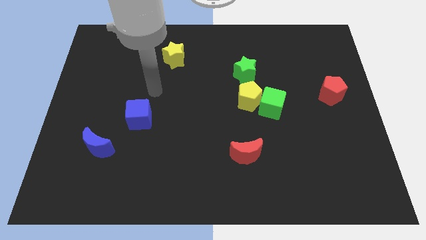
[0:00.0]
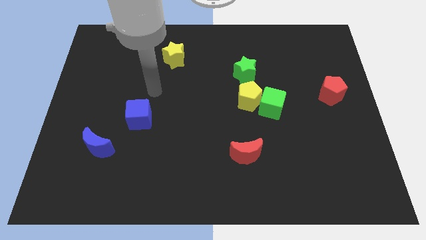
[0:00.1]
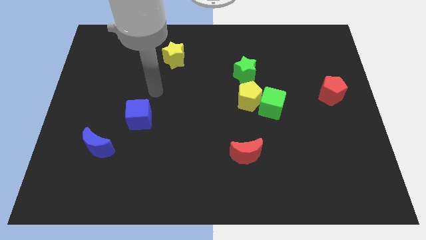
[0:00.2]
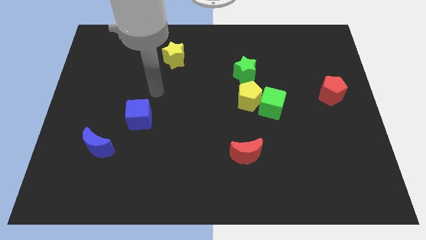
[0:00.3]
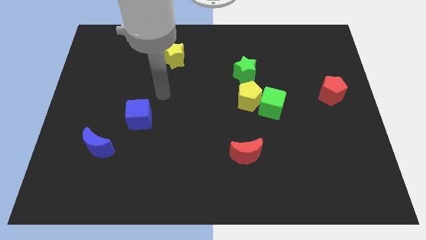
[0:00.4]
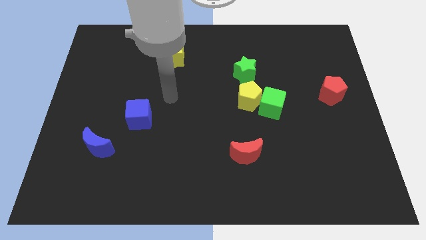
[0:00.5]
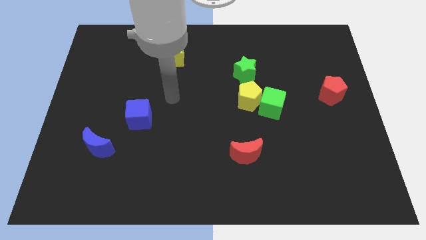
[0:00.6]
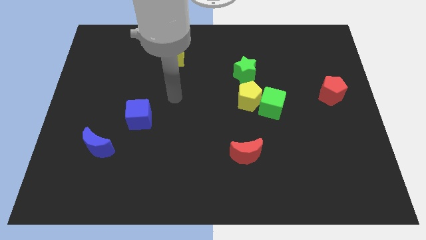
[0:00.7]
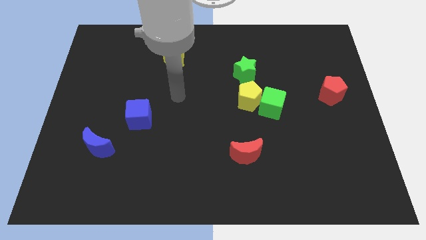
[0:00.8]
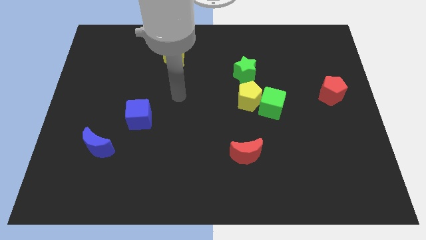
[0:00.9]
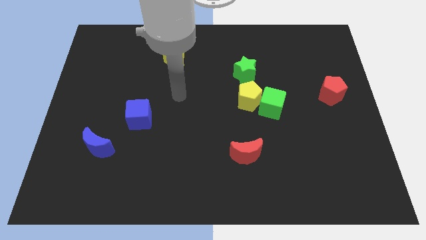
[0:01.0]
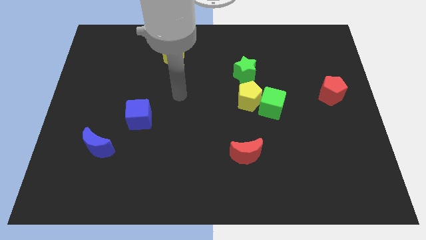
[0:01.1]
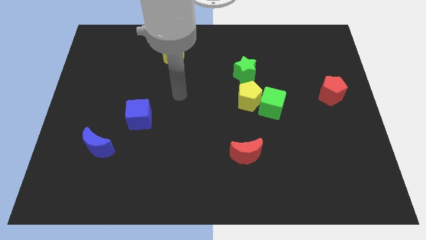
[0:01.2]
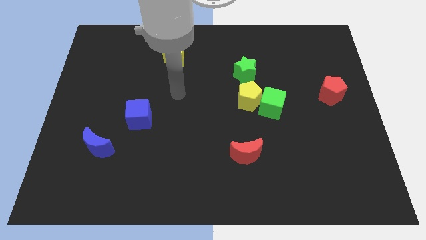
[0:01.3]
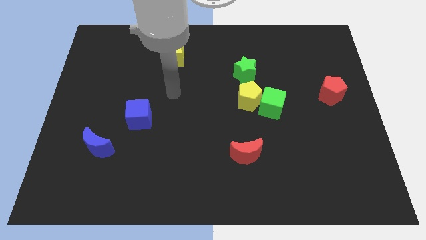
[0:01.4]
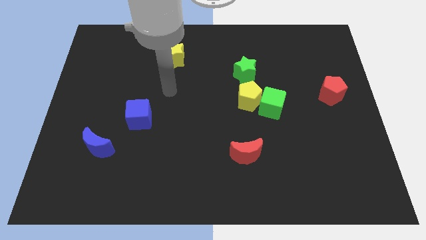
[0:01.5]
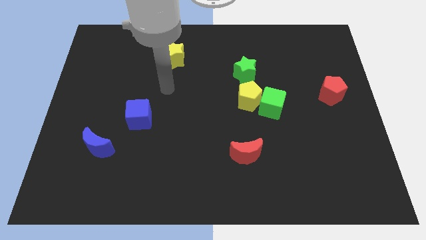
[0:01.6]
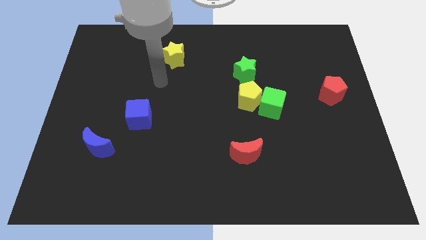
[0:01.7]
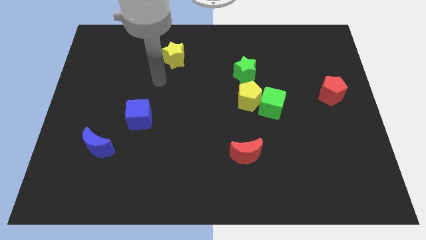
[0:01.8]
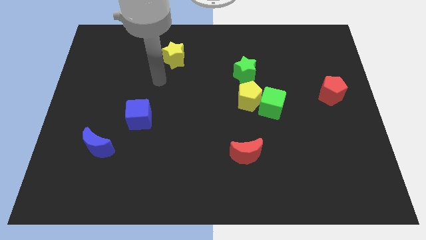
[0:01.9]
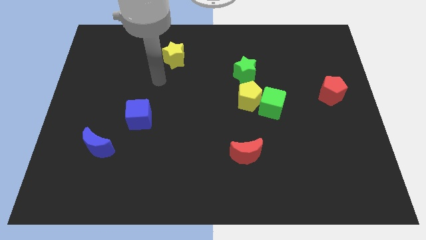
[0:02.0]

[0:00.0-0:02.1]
place the arm between blue cube and yellow star

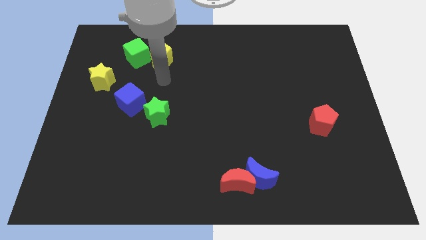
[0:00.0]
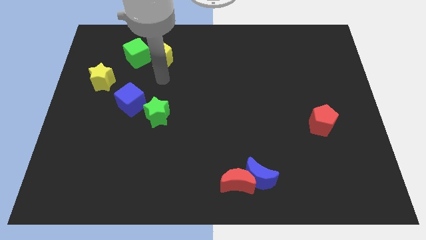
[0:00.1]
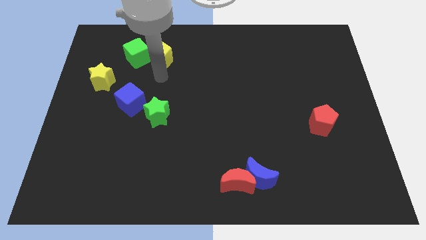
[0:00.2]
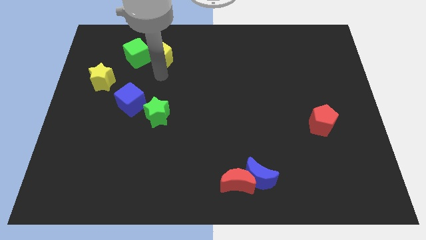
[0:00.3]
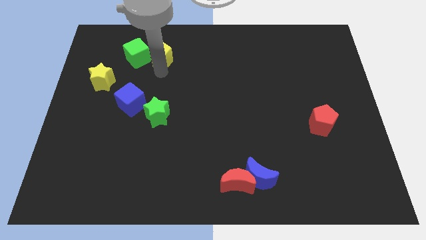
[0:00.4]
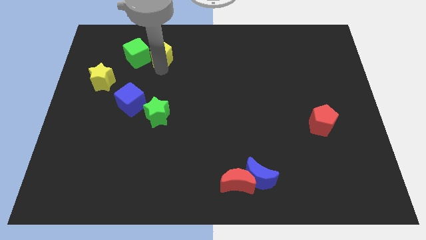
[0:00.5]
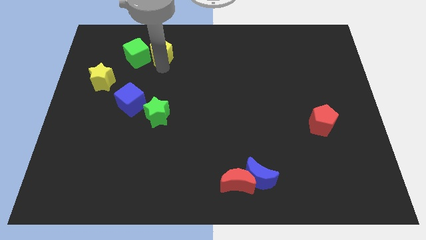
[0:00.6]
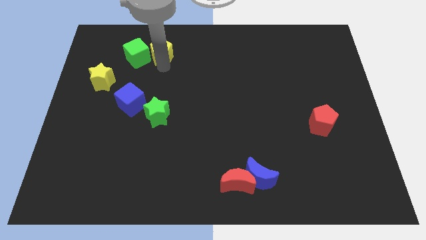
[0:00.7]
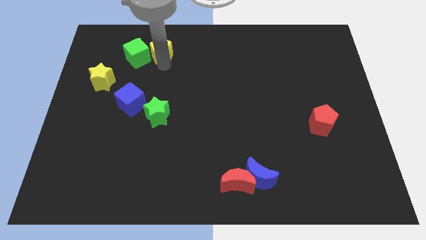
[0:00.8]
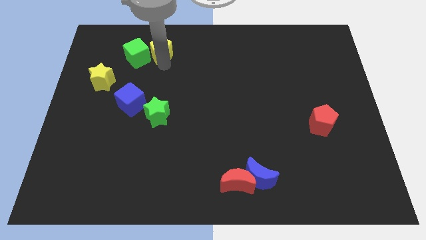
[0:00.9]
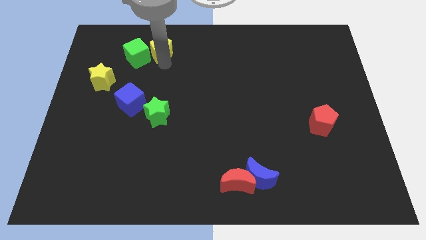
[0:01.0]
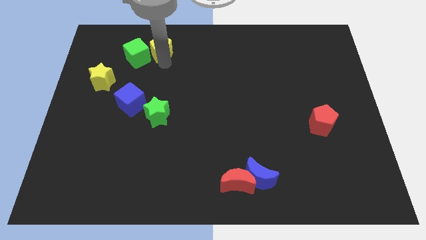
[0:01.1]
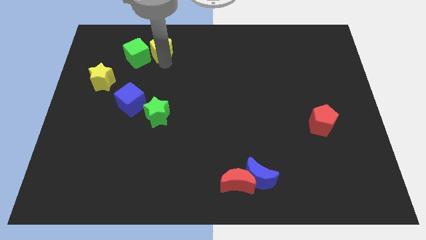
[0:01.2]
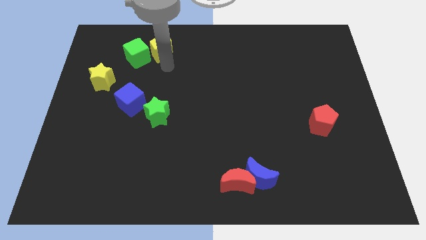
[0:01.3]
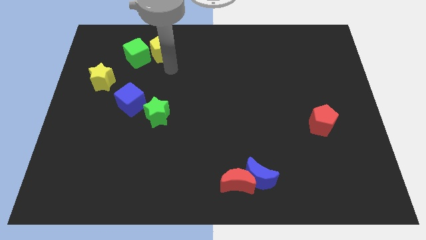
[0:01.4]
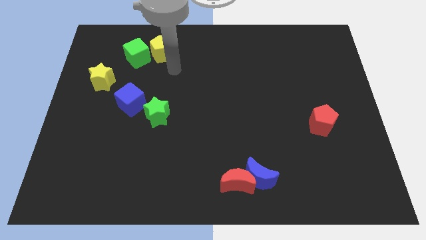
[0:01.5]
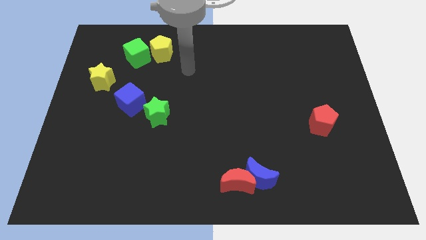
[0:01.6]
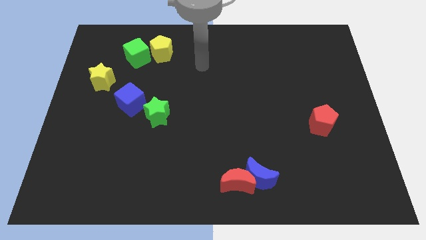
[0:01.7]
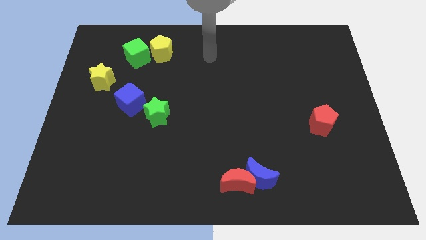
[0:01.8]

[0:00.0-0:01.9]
place the yellow pentagon right to the green cube

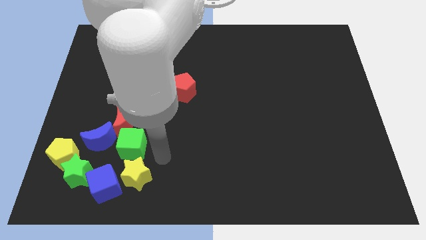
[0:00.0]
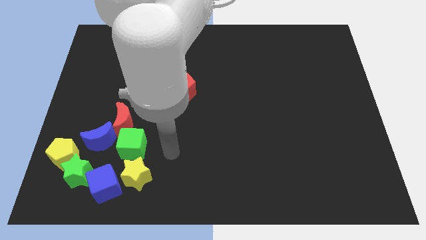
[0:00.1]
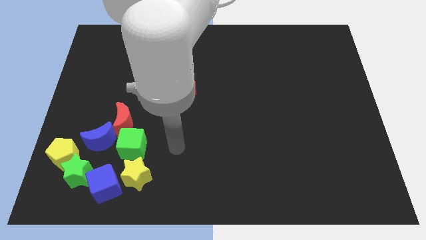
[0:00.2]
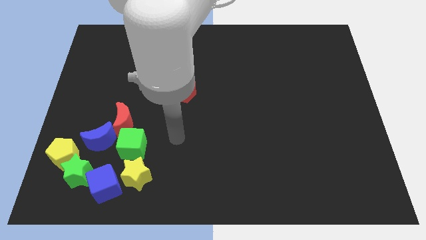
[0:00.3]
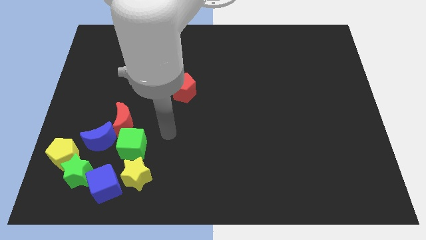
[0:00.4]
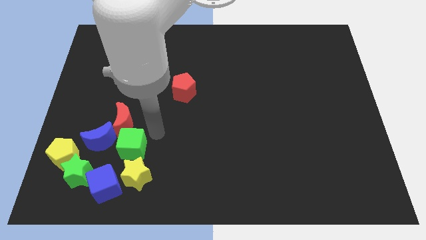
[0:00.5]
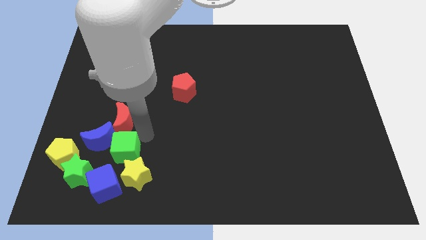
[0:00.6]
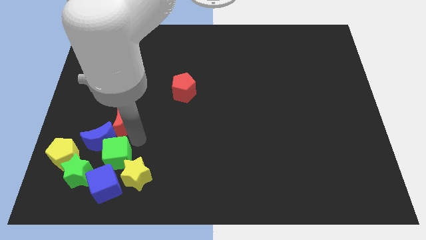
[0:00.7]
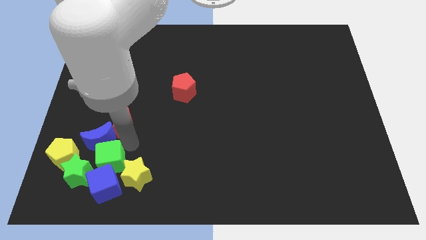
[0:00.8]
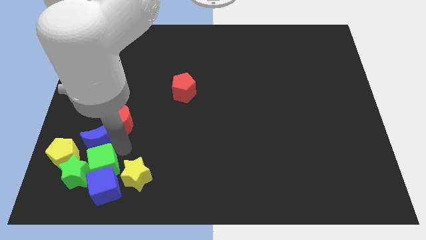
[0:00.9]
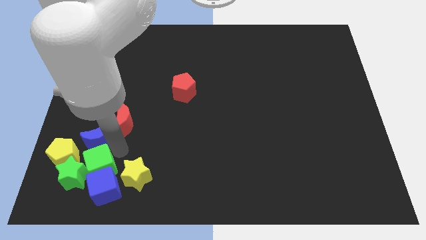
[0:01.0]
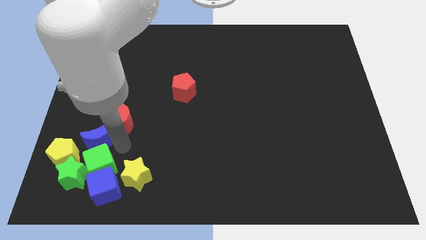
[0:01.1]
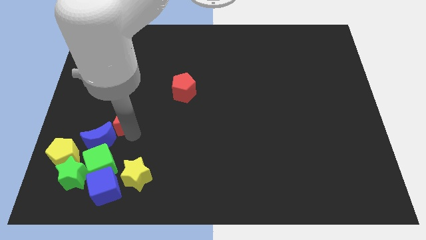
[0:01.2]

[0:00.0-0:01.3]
push the green cube into the green star

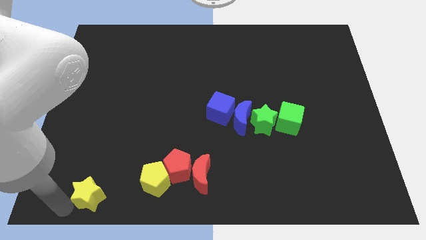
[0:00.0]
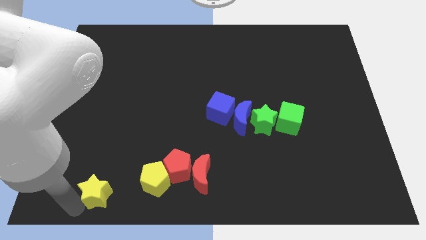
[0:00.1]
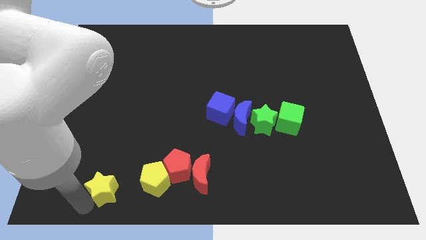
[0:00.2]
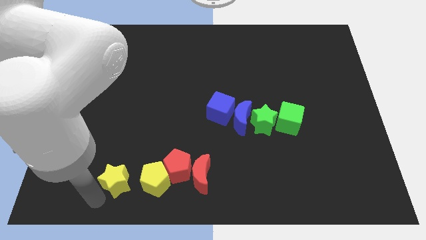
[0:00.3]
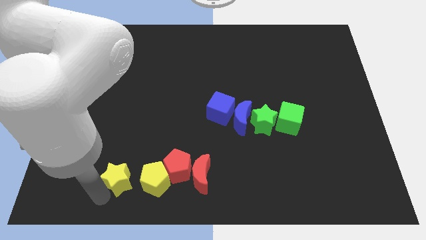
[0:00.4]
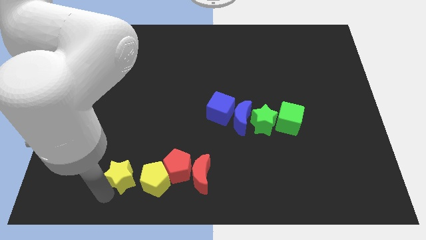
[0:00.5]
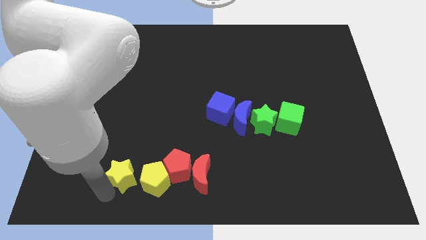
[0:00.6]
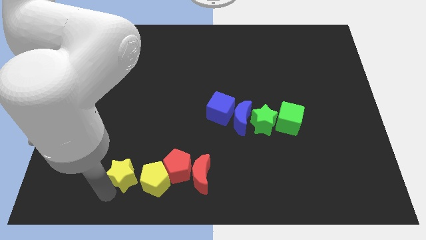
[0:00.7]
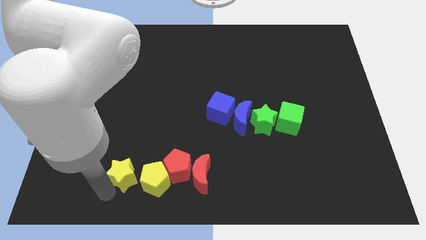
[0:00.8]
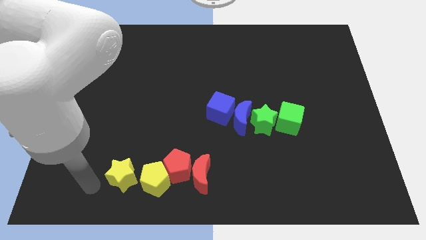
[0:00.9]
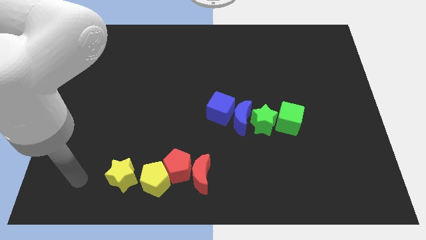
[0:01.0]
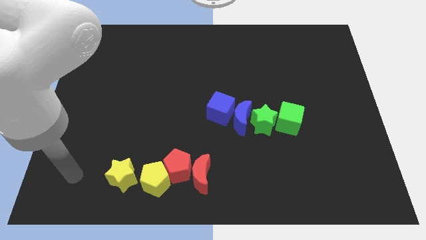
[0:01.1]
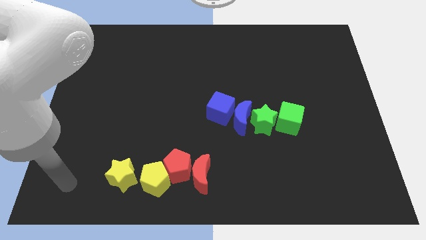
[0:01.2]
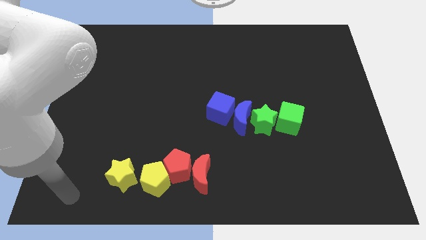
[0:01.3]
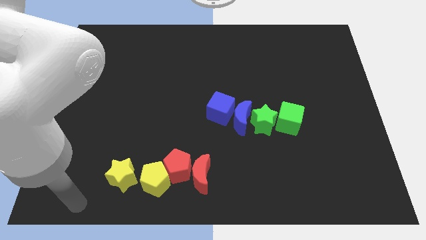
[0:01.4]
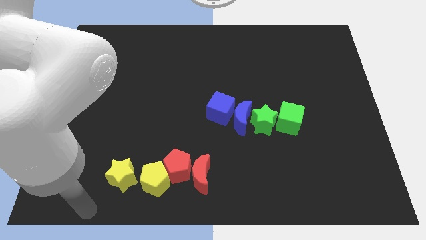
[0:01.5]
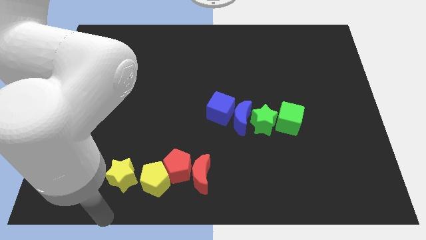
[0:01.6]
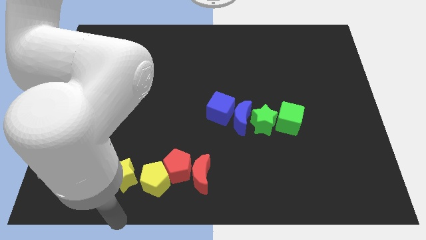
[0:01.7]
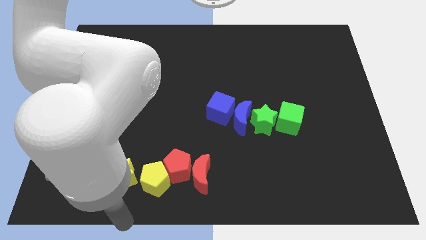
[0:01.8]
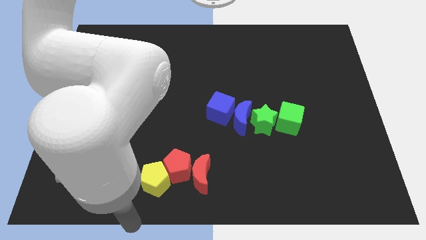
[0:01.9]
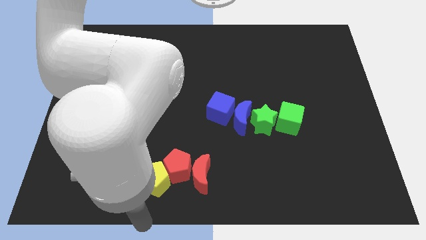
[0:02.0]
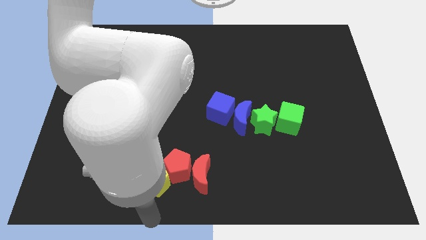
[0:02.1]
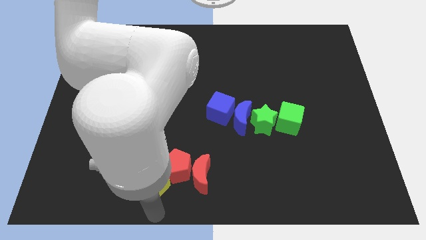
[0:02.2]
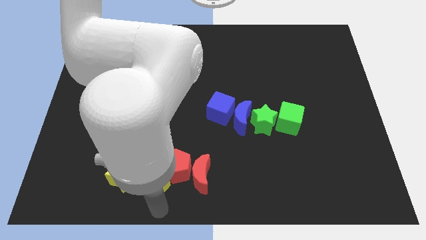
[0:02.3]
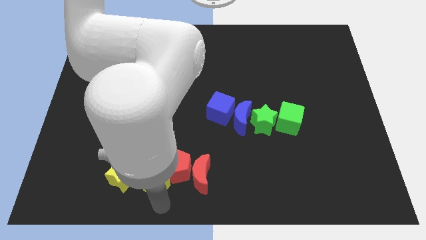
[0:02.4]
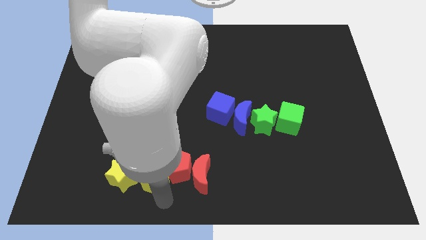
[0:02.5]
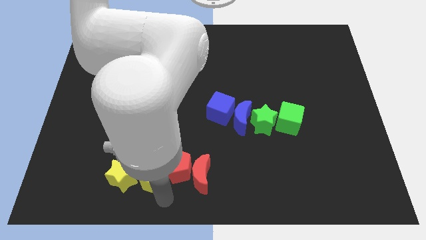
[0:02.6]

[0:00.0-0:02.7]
push the yellow star close to the yellow pentagon

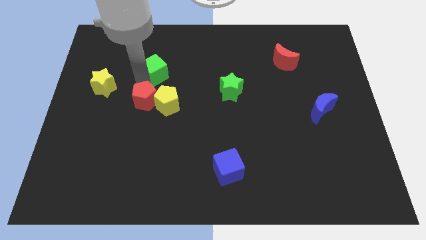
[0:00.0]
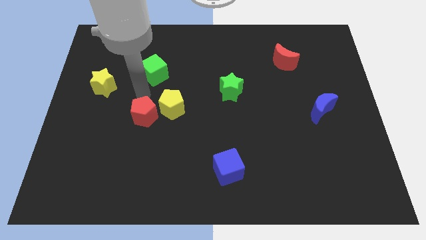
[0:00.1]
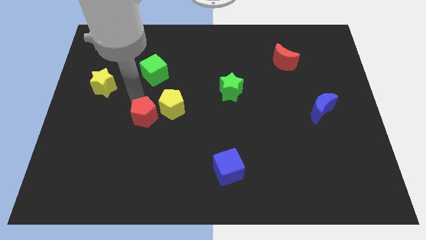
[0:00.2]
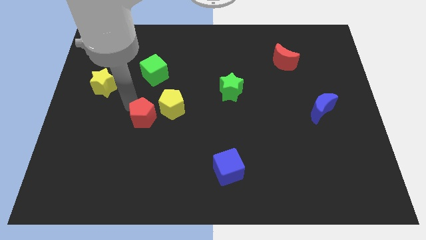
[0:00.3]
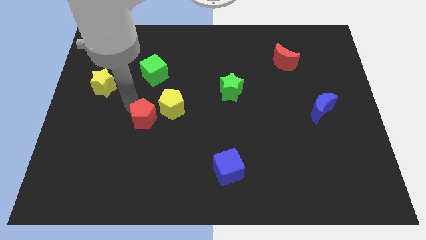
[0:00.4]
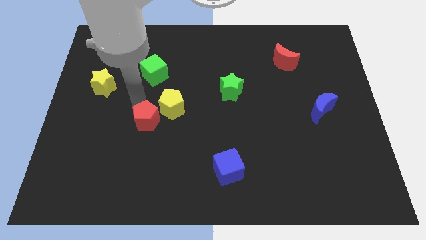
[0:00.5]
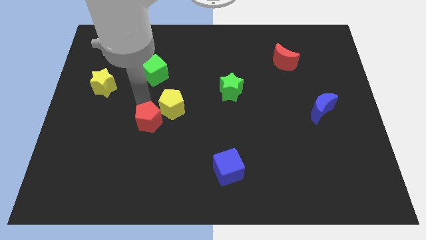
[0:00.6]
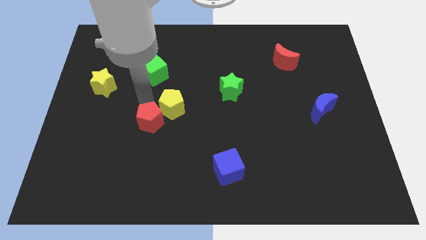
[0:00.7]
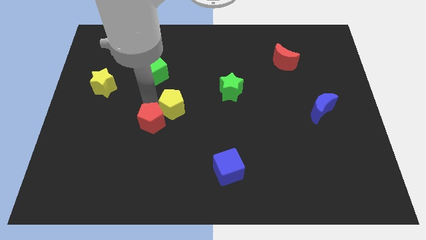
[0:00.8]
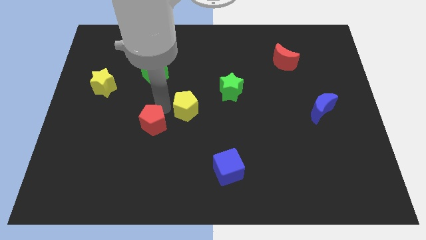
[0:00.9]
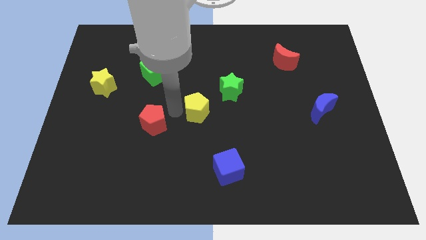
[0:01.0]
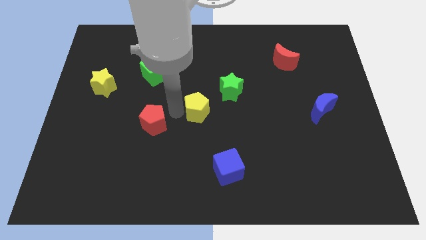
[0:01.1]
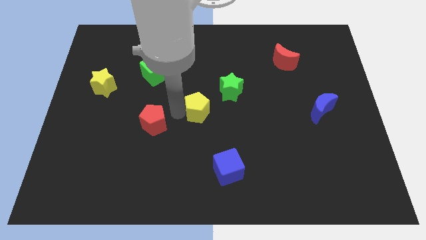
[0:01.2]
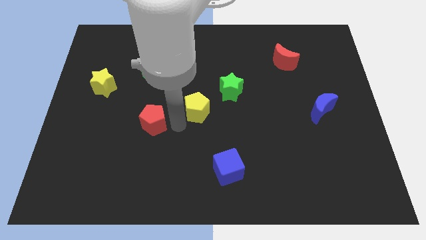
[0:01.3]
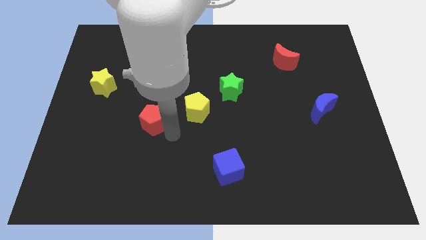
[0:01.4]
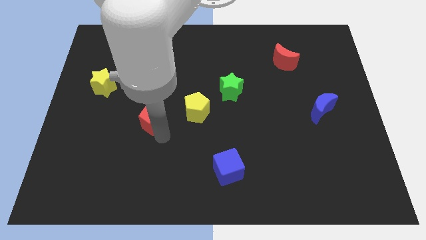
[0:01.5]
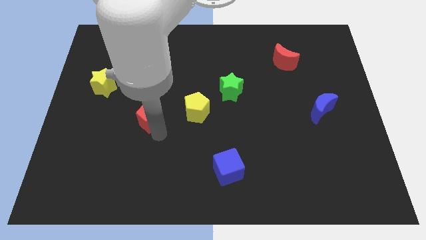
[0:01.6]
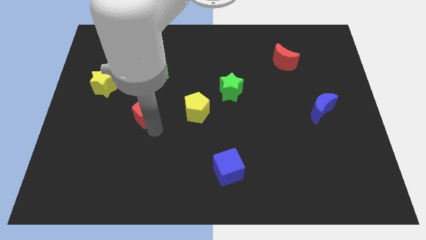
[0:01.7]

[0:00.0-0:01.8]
separate the red pentagon and yellow pentagon
